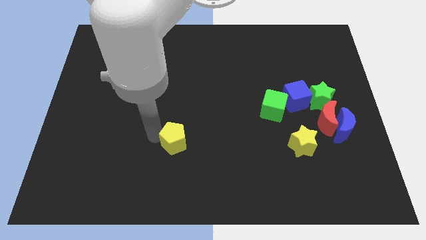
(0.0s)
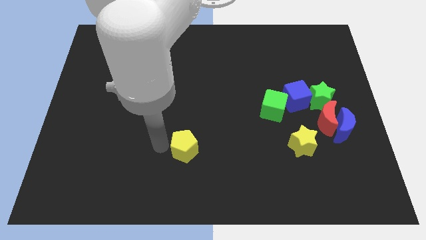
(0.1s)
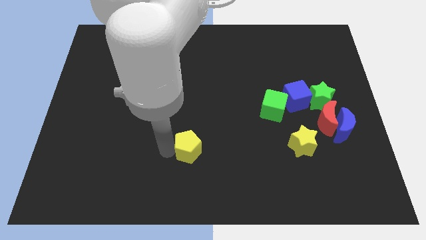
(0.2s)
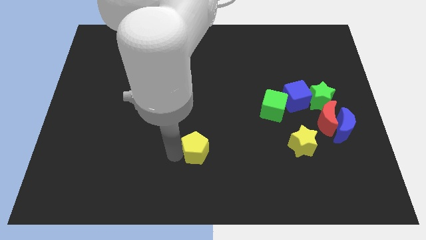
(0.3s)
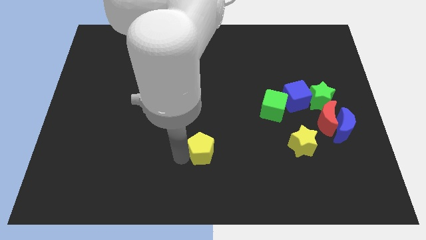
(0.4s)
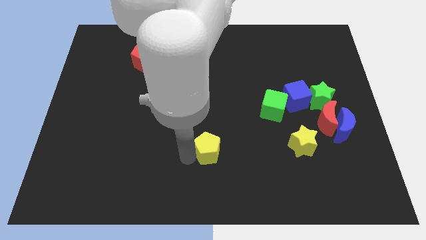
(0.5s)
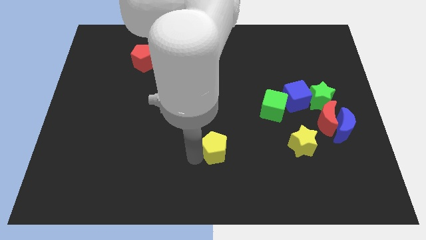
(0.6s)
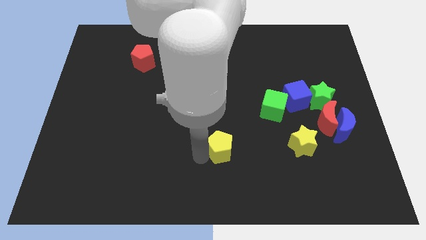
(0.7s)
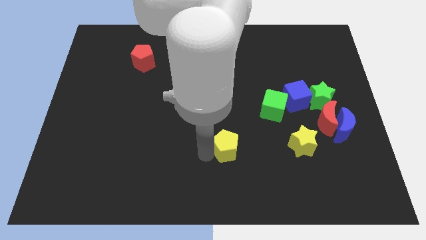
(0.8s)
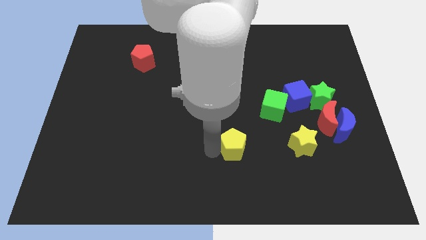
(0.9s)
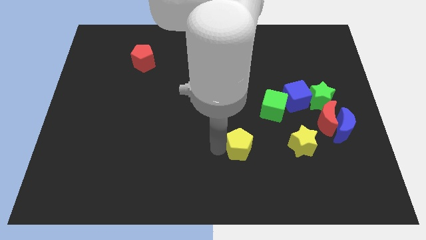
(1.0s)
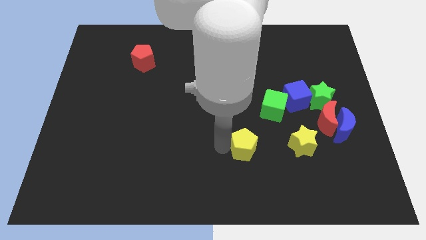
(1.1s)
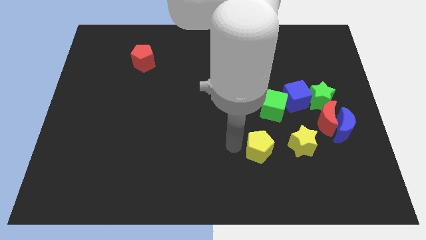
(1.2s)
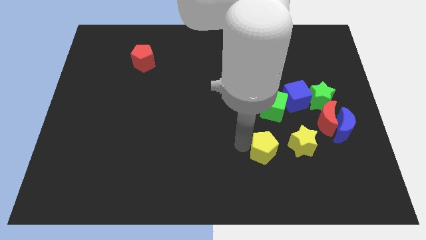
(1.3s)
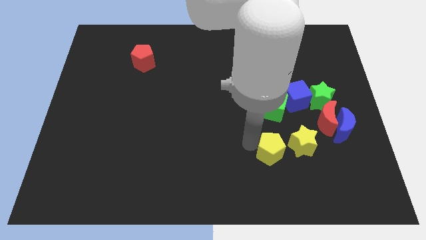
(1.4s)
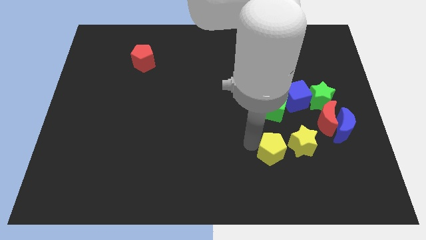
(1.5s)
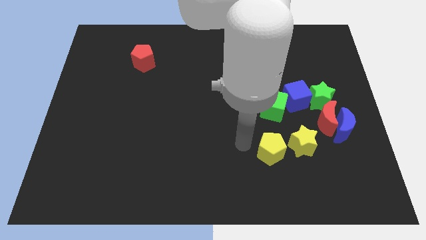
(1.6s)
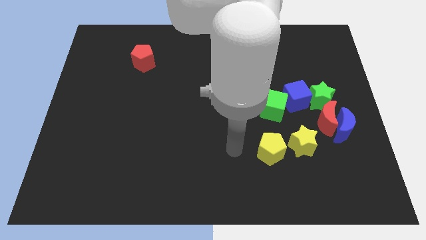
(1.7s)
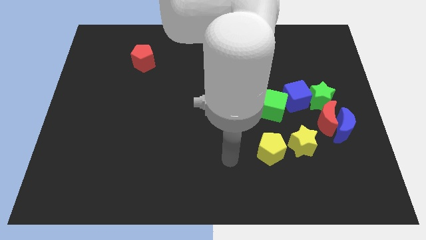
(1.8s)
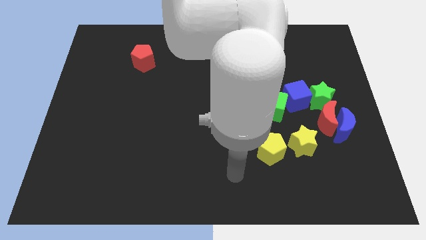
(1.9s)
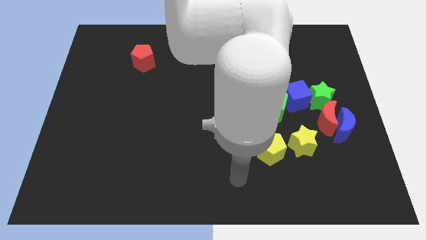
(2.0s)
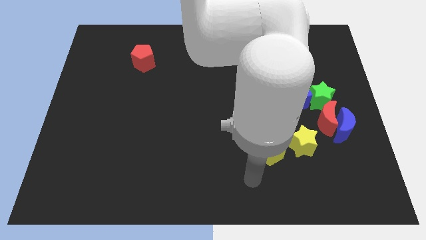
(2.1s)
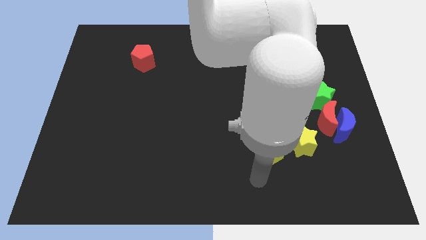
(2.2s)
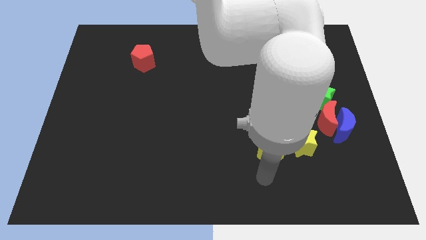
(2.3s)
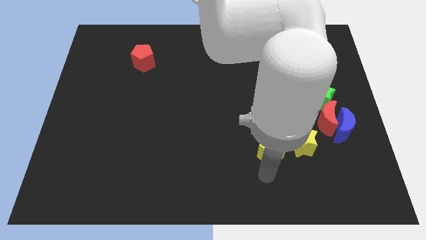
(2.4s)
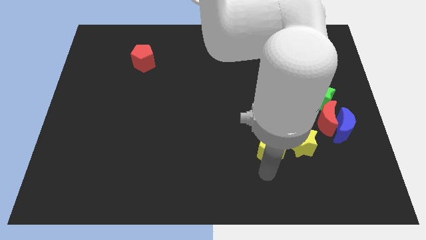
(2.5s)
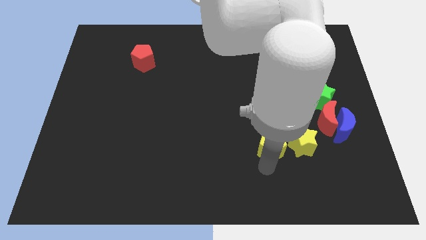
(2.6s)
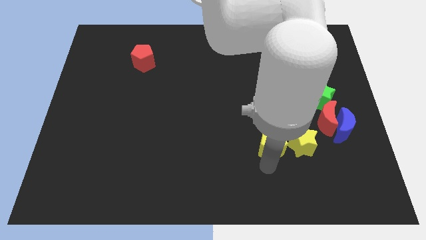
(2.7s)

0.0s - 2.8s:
push yellow pentagon close to yellow star

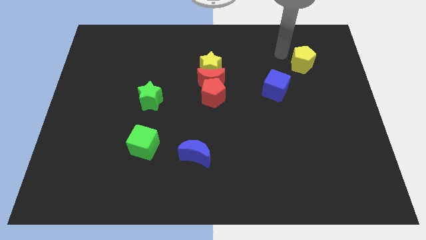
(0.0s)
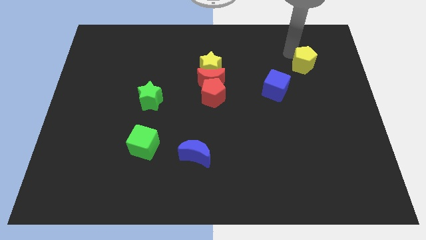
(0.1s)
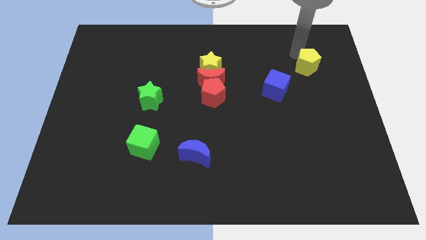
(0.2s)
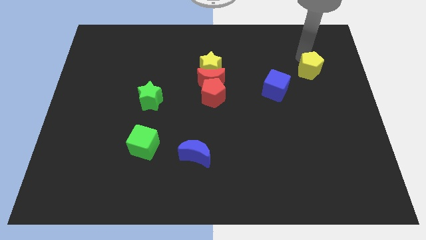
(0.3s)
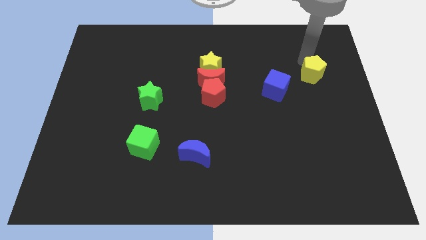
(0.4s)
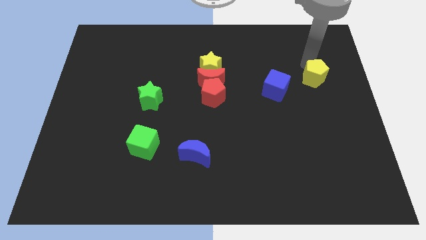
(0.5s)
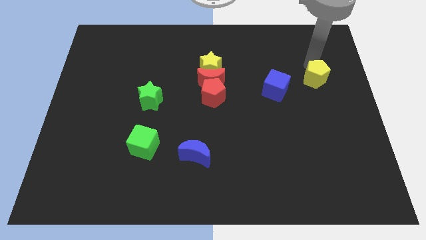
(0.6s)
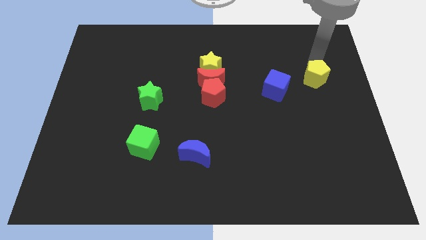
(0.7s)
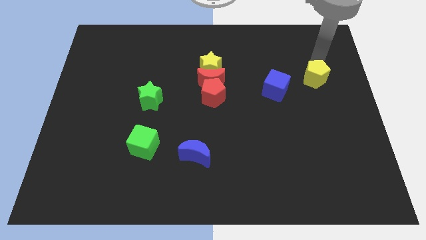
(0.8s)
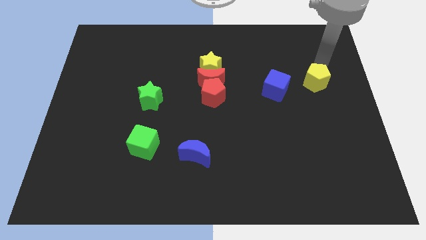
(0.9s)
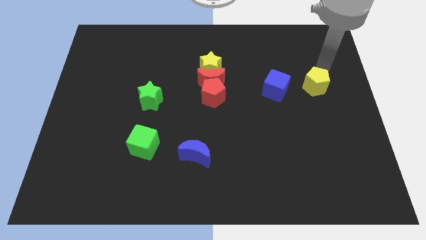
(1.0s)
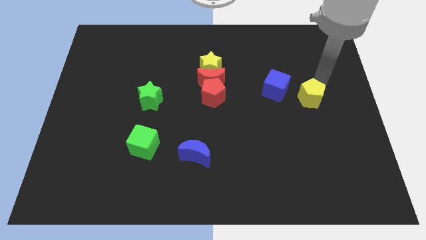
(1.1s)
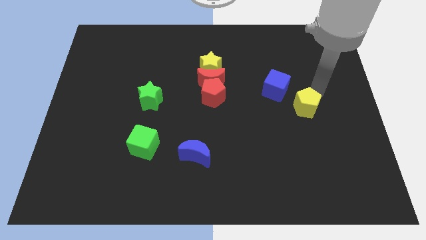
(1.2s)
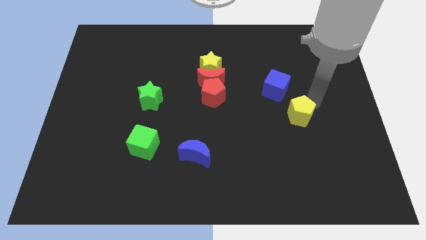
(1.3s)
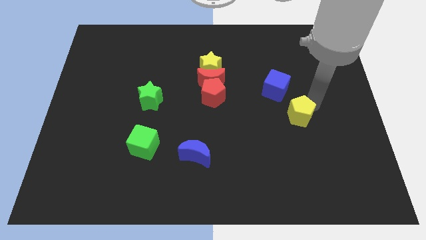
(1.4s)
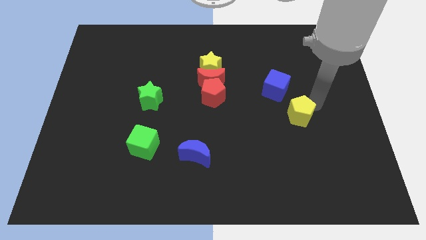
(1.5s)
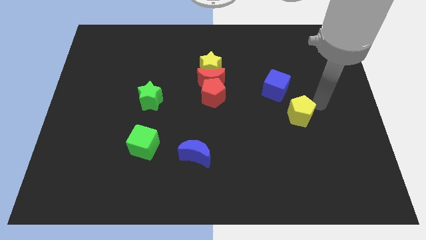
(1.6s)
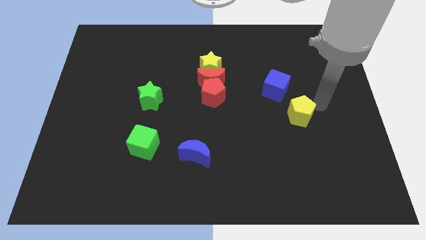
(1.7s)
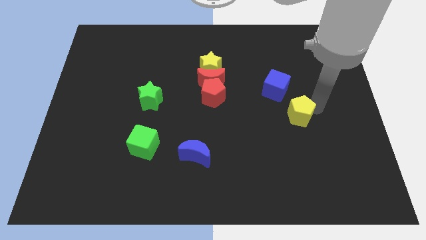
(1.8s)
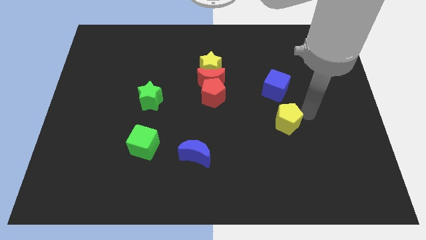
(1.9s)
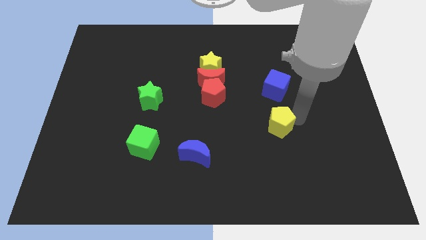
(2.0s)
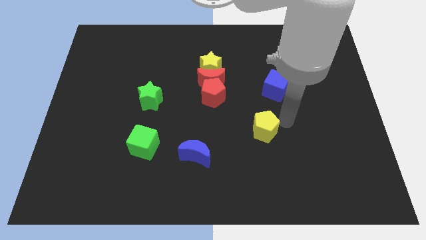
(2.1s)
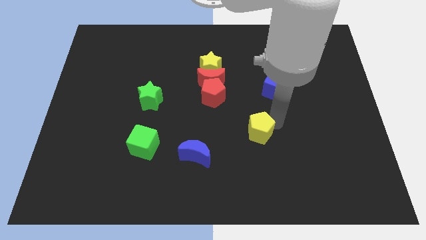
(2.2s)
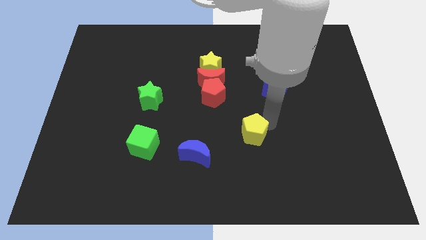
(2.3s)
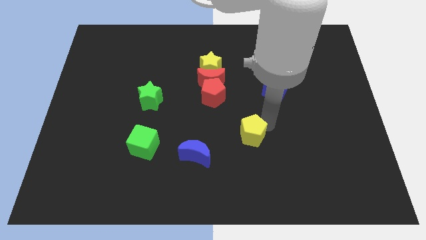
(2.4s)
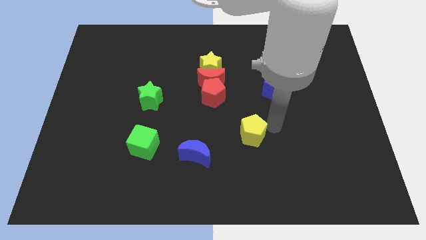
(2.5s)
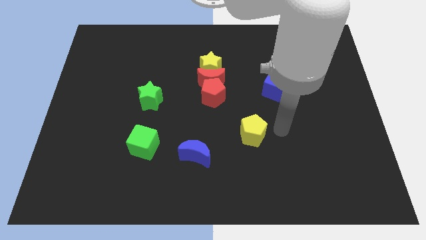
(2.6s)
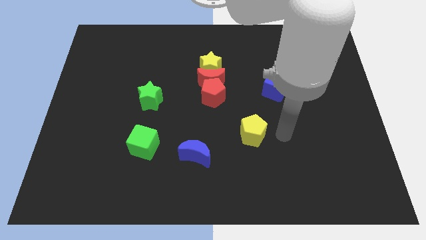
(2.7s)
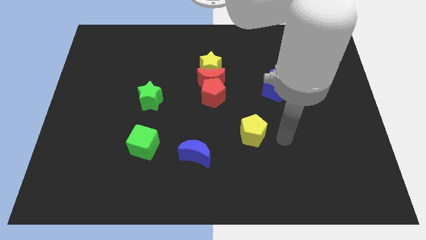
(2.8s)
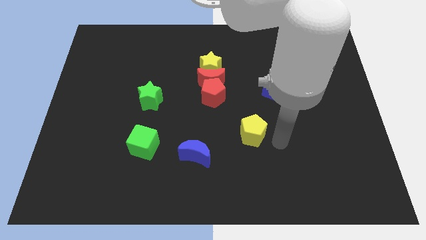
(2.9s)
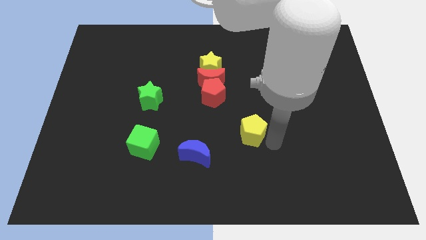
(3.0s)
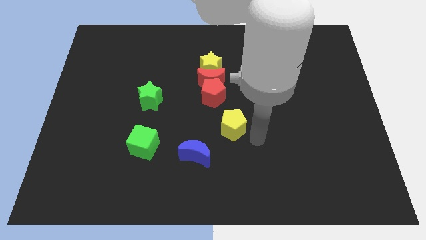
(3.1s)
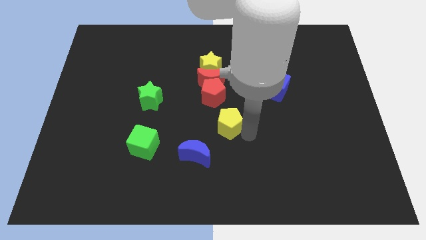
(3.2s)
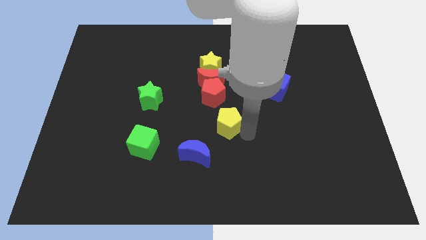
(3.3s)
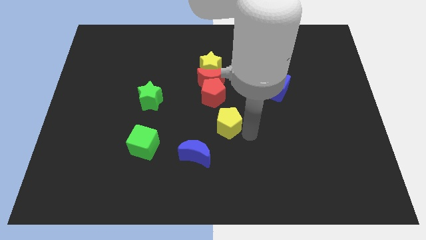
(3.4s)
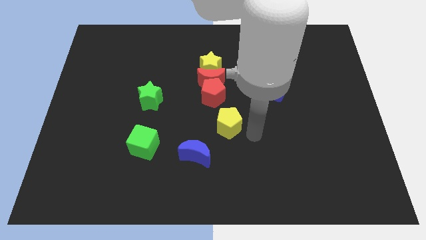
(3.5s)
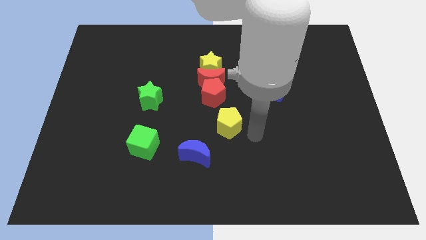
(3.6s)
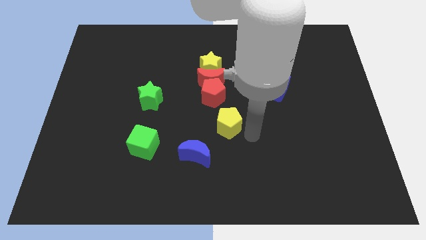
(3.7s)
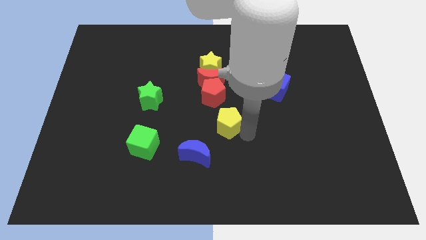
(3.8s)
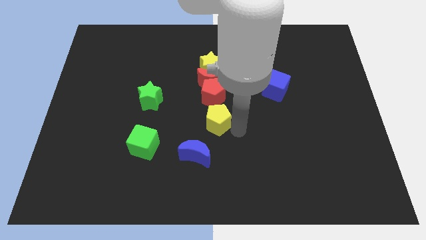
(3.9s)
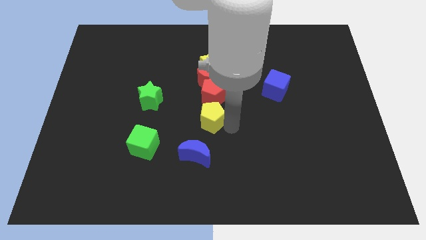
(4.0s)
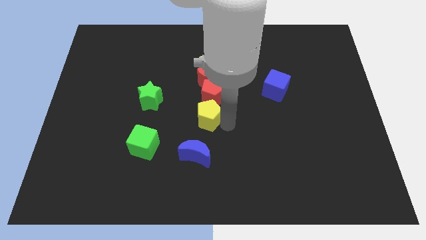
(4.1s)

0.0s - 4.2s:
place the yellow pentagon below the red pentagon

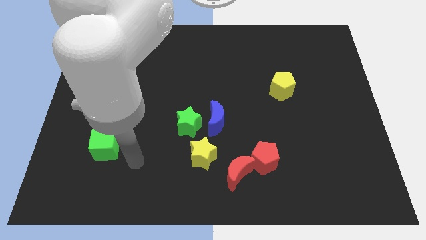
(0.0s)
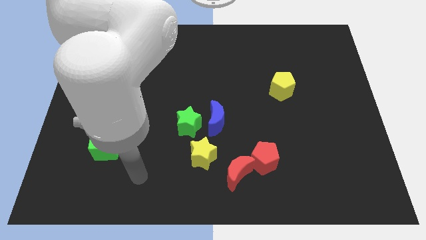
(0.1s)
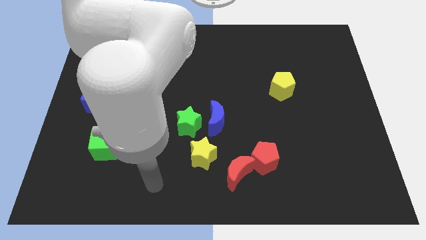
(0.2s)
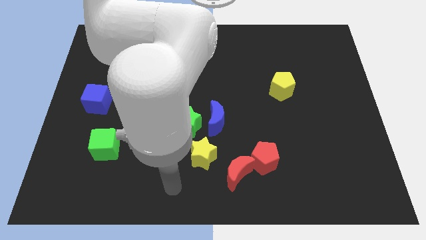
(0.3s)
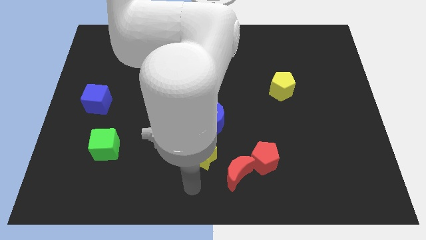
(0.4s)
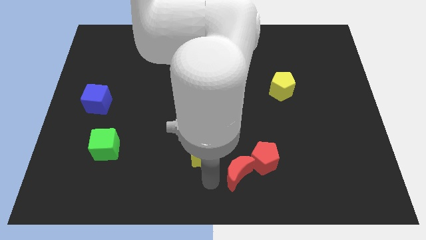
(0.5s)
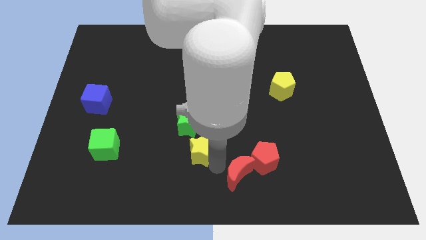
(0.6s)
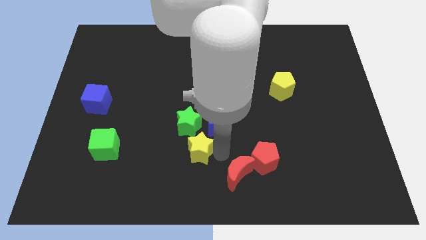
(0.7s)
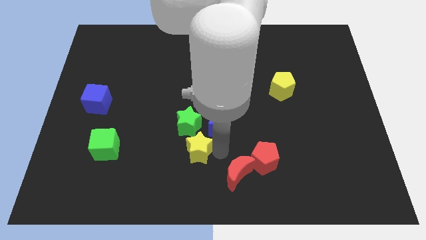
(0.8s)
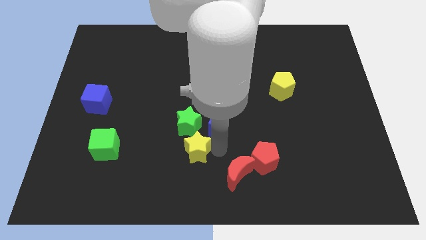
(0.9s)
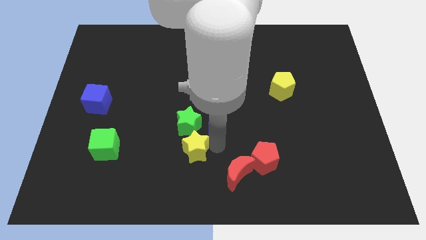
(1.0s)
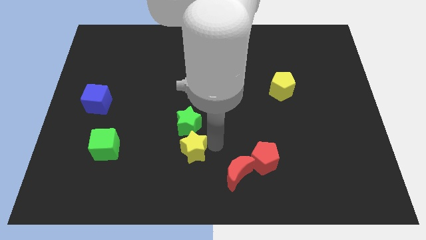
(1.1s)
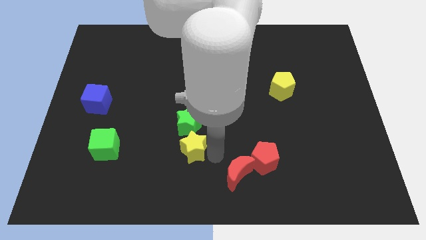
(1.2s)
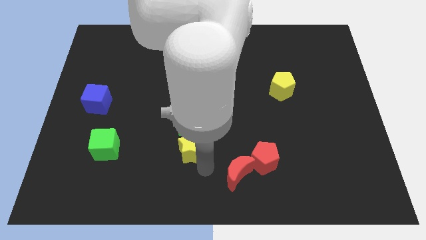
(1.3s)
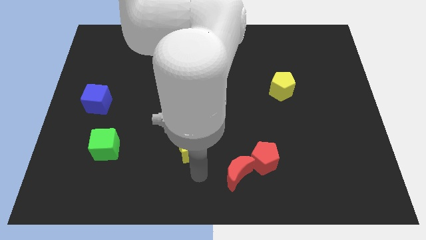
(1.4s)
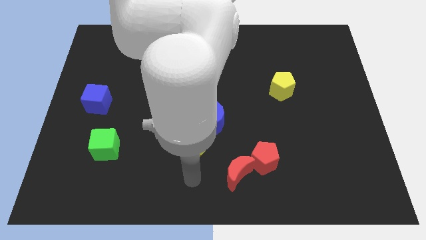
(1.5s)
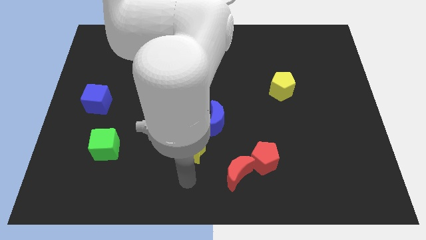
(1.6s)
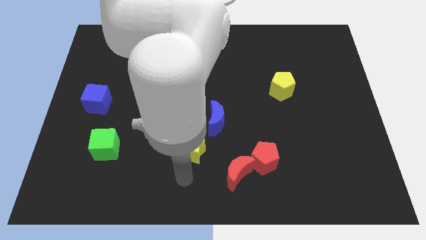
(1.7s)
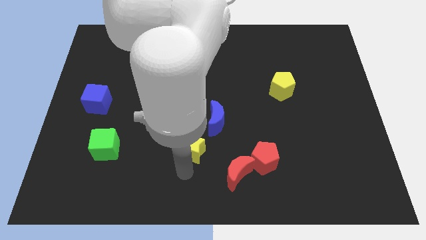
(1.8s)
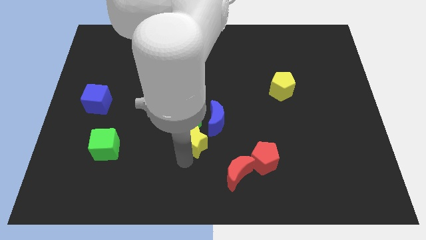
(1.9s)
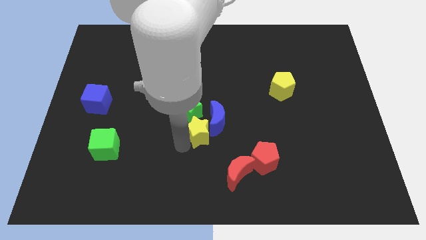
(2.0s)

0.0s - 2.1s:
move yellow star near to the green star
